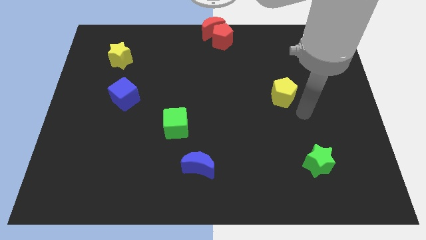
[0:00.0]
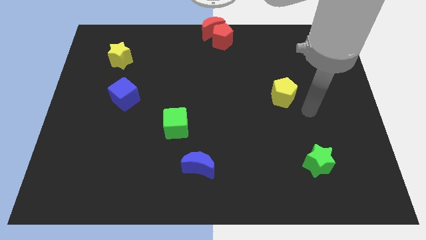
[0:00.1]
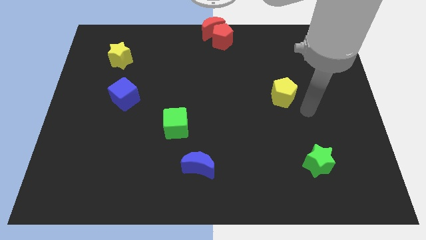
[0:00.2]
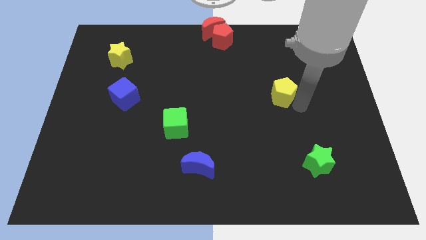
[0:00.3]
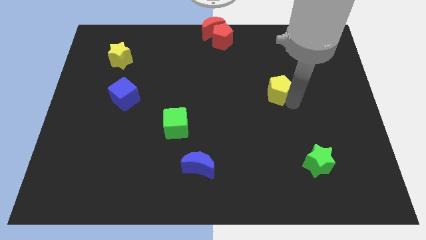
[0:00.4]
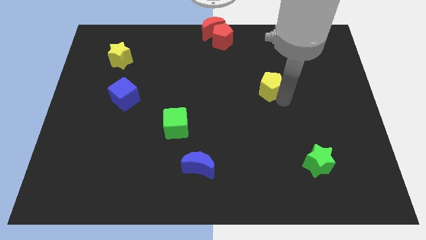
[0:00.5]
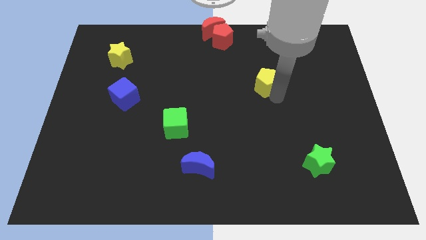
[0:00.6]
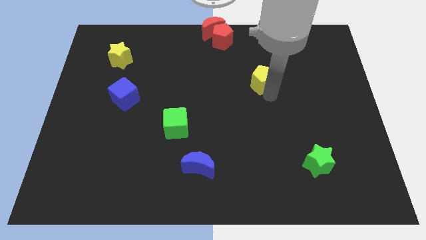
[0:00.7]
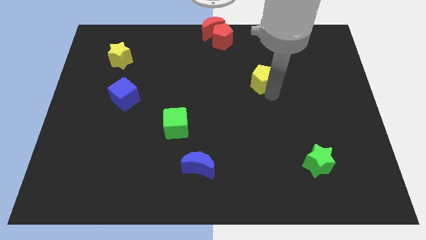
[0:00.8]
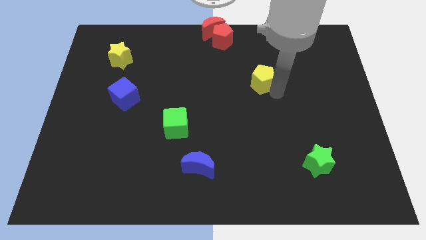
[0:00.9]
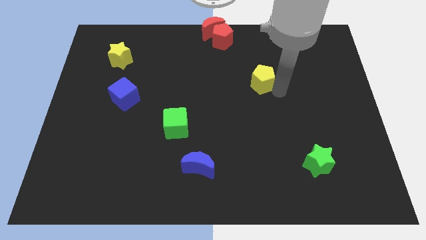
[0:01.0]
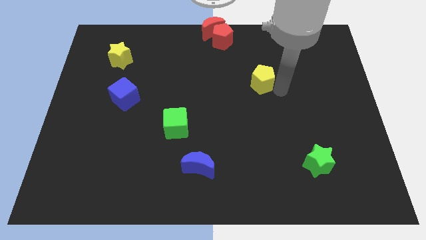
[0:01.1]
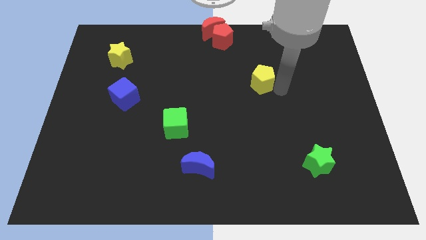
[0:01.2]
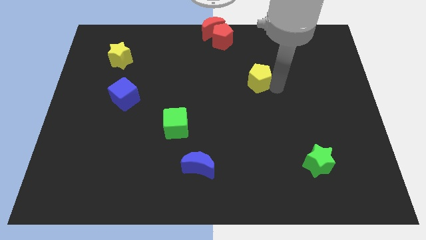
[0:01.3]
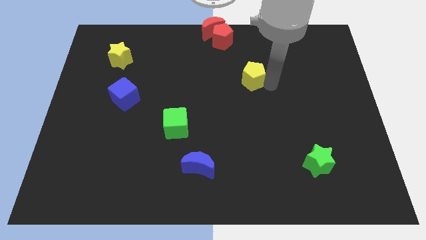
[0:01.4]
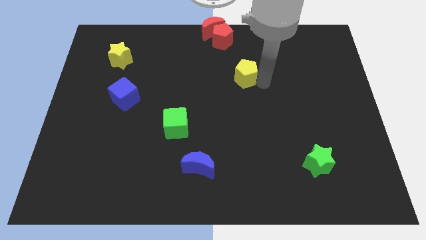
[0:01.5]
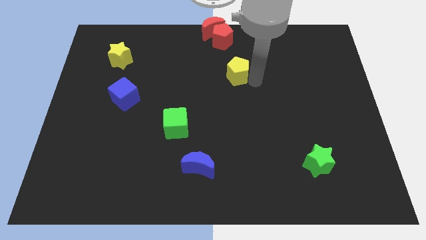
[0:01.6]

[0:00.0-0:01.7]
reposition the yellow pentagon from present place

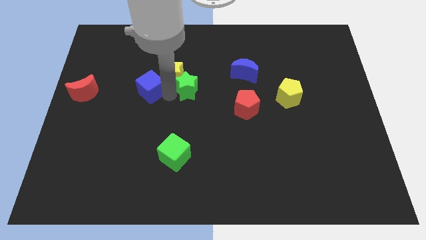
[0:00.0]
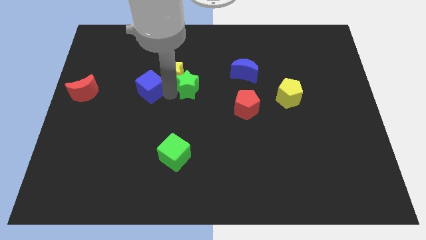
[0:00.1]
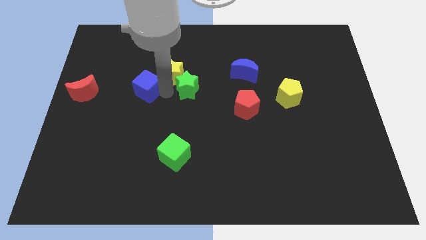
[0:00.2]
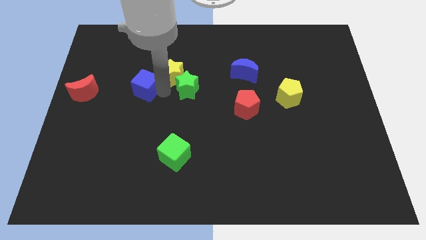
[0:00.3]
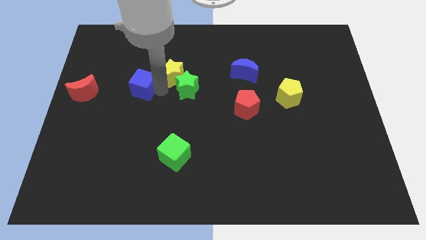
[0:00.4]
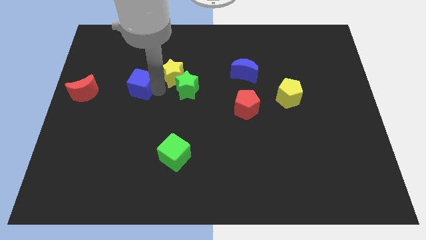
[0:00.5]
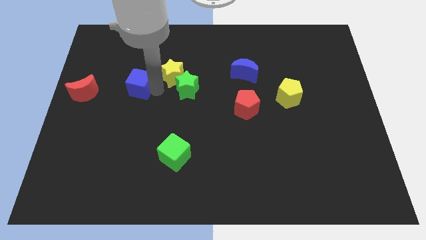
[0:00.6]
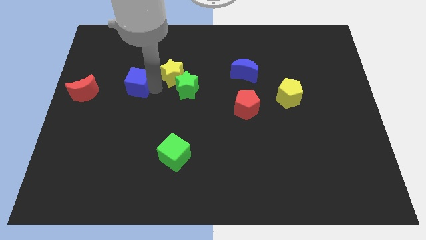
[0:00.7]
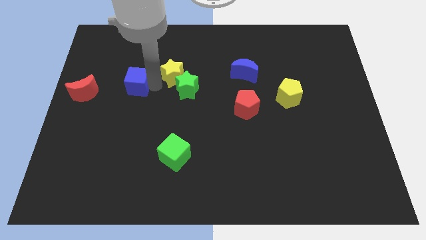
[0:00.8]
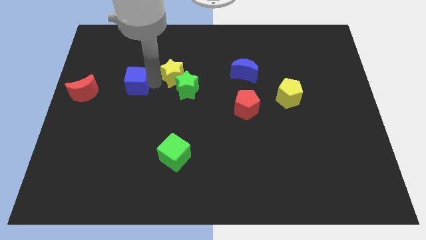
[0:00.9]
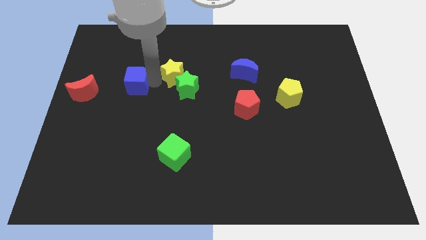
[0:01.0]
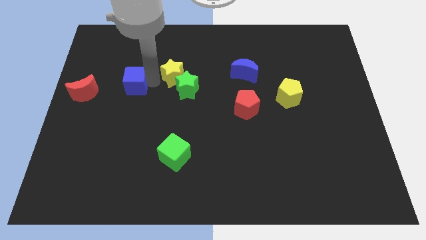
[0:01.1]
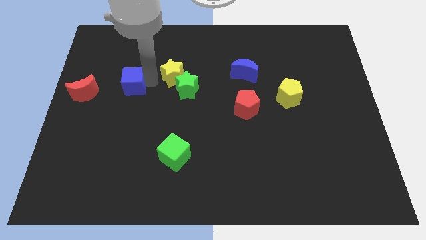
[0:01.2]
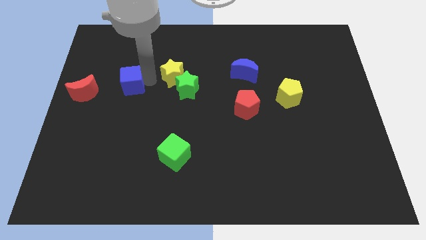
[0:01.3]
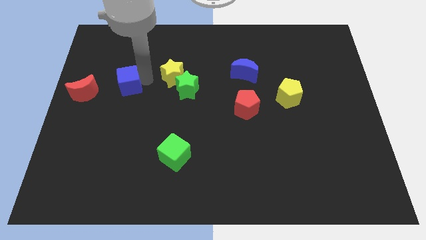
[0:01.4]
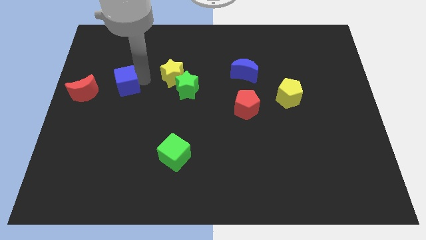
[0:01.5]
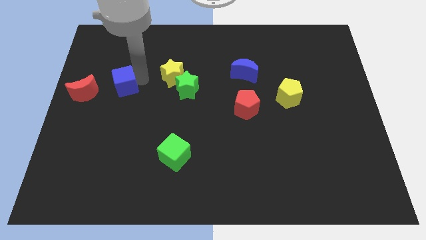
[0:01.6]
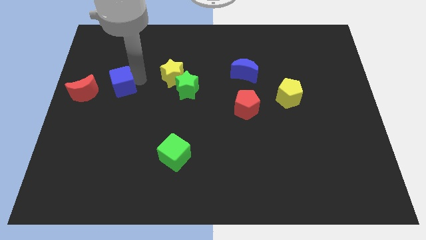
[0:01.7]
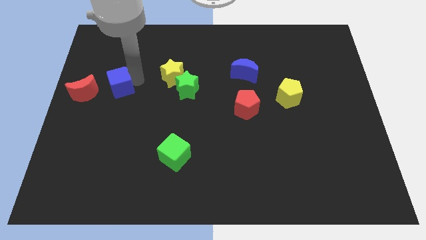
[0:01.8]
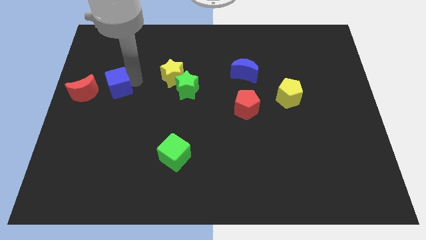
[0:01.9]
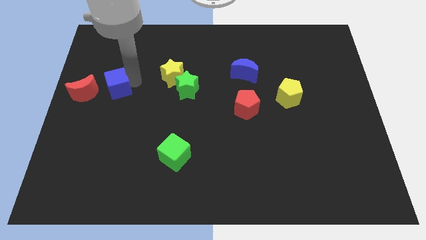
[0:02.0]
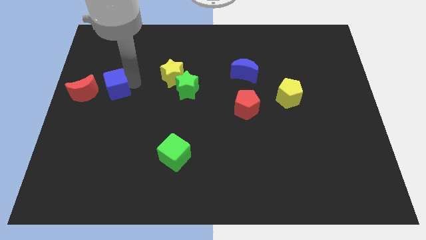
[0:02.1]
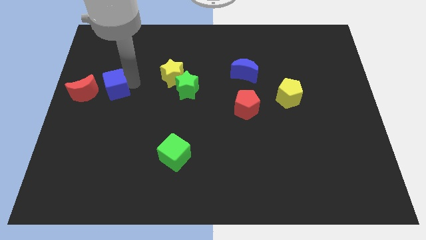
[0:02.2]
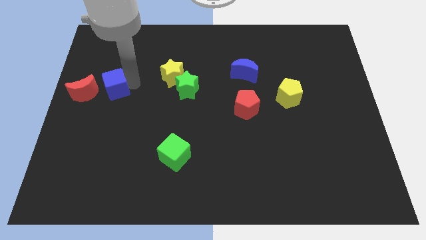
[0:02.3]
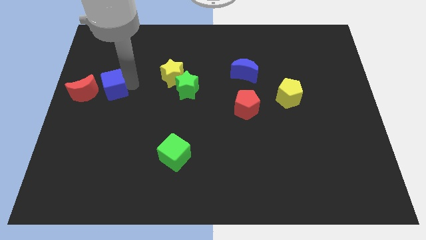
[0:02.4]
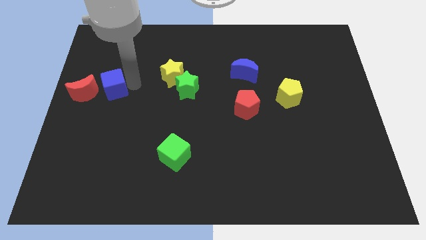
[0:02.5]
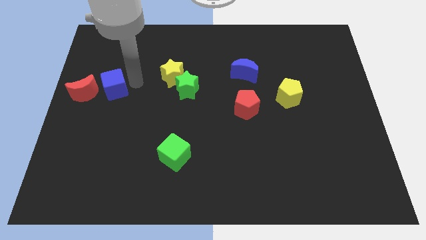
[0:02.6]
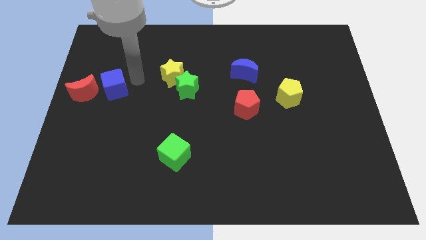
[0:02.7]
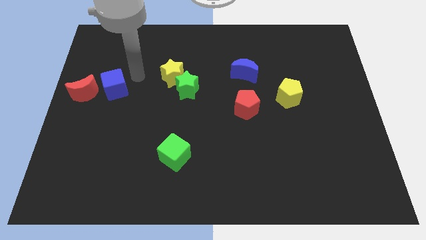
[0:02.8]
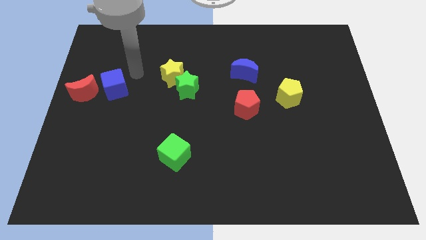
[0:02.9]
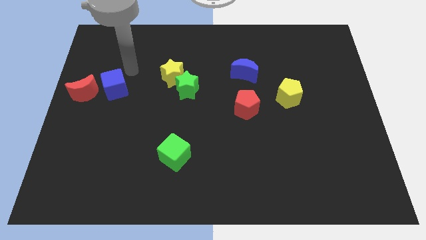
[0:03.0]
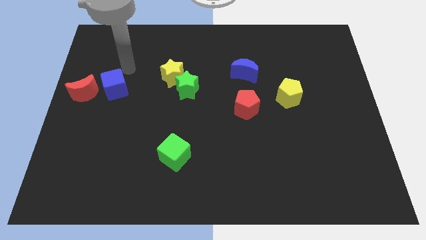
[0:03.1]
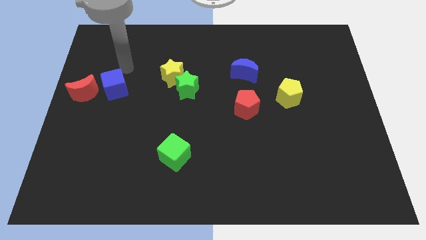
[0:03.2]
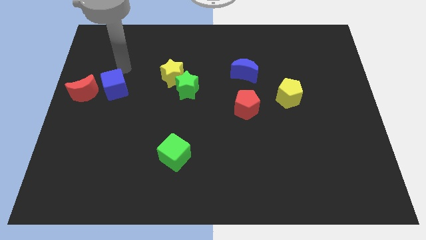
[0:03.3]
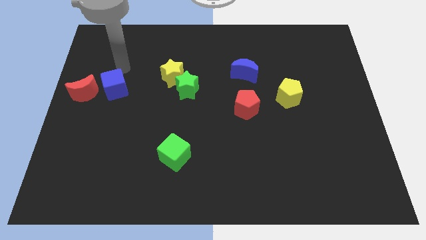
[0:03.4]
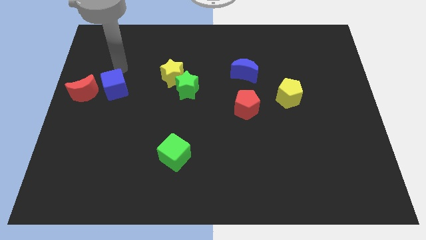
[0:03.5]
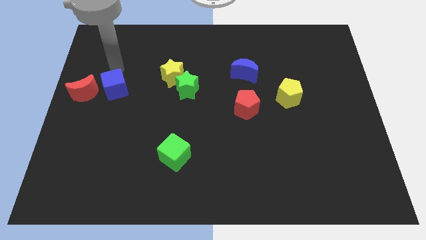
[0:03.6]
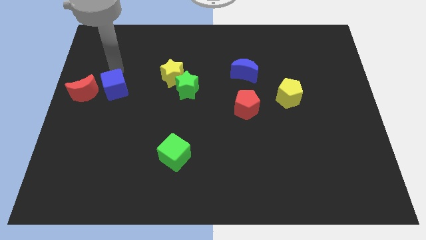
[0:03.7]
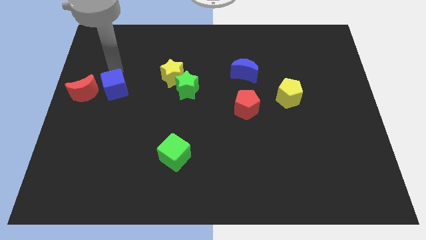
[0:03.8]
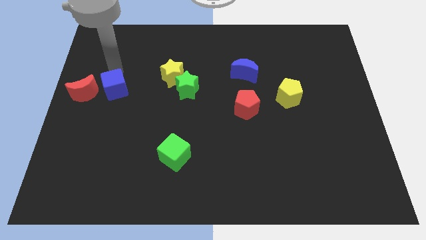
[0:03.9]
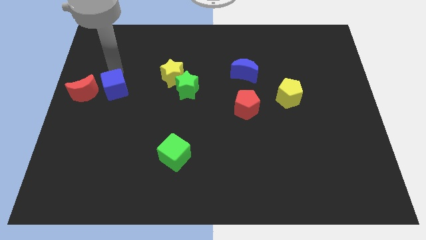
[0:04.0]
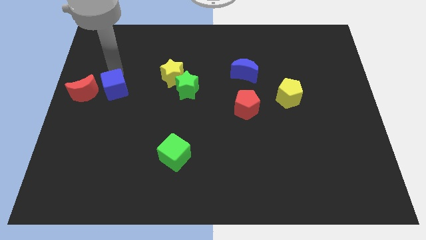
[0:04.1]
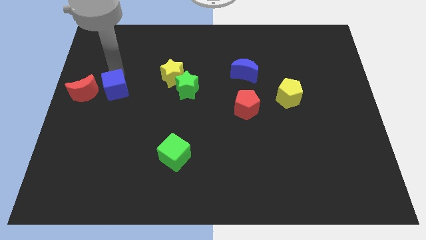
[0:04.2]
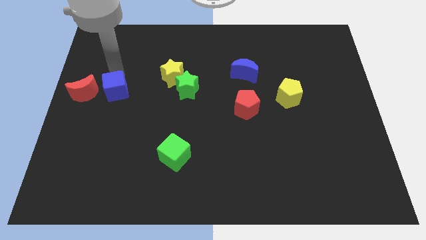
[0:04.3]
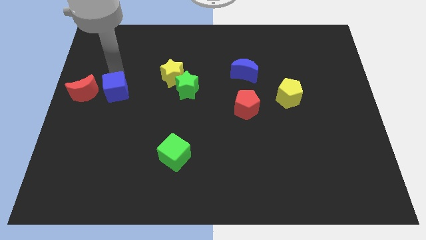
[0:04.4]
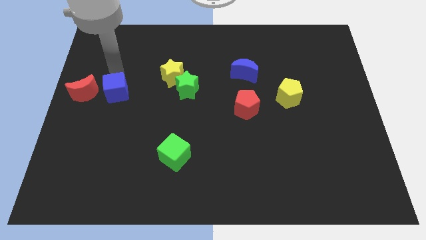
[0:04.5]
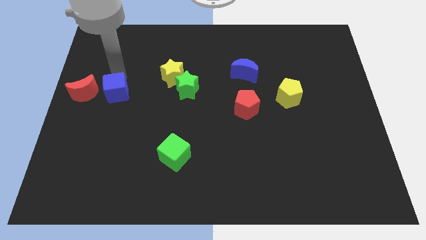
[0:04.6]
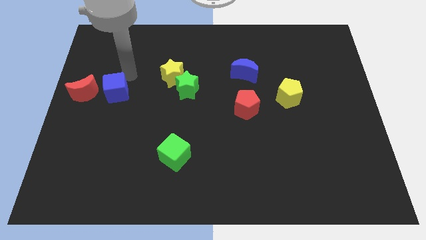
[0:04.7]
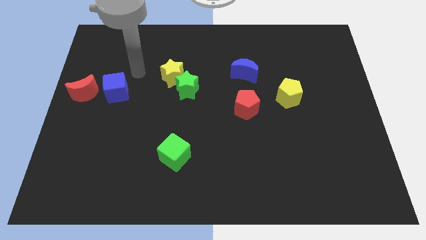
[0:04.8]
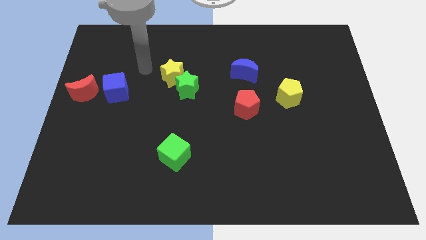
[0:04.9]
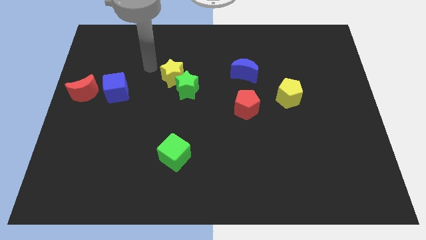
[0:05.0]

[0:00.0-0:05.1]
place the blue cube parallel to green and yellow stars

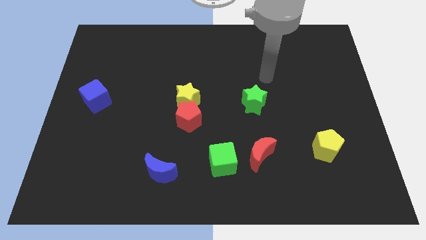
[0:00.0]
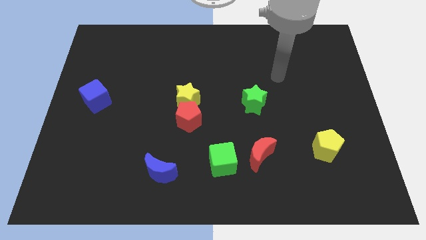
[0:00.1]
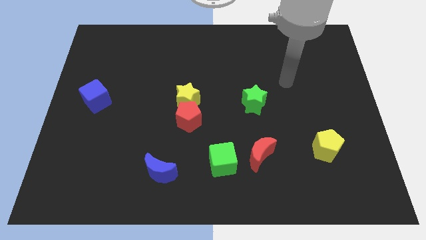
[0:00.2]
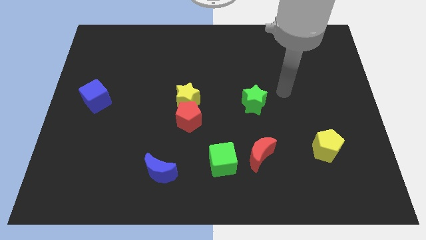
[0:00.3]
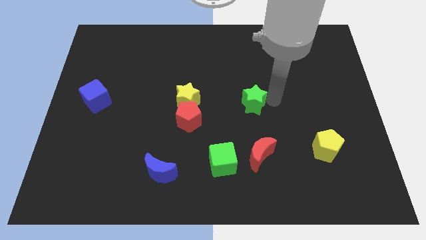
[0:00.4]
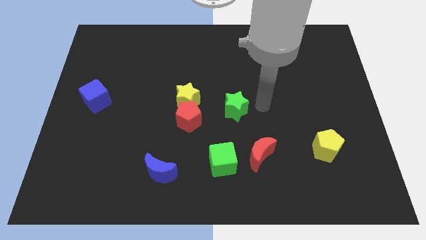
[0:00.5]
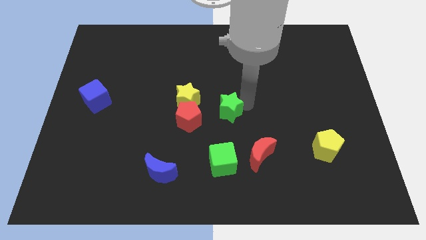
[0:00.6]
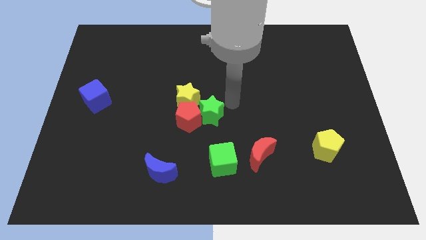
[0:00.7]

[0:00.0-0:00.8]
push the green star to the right of red pentagon

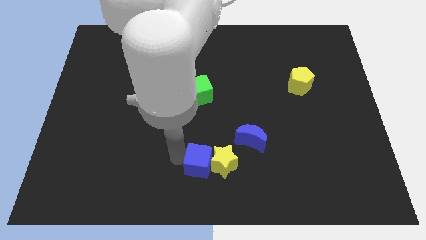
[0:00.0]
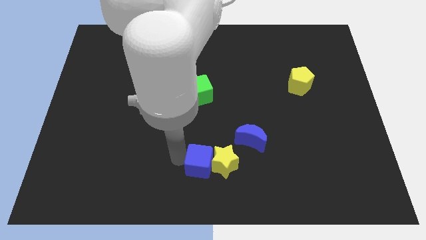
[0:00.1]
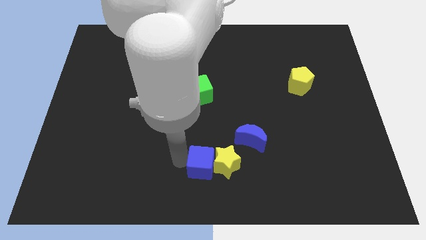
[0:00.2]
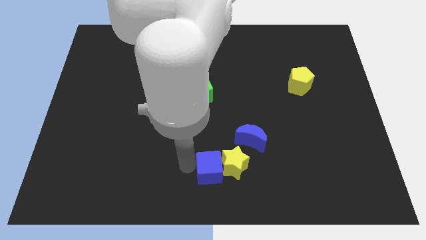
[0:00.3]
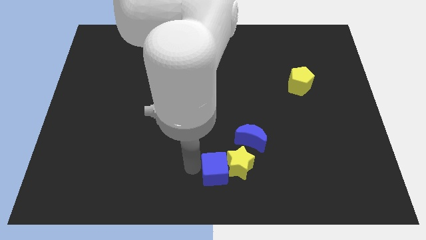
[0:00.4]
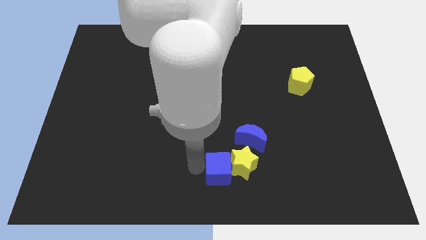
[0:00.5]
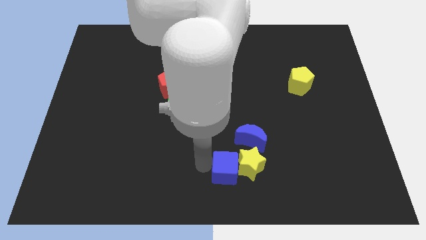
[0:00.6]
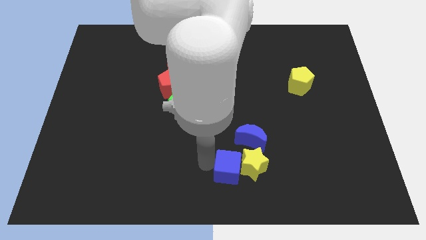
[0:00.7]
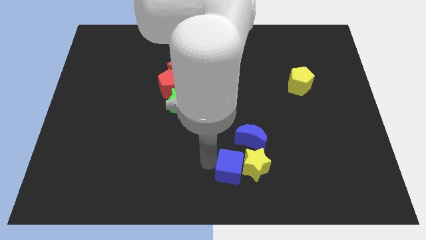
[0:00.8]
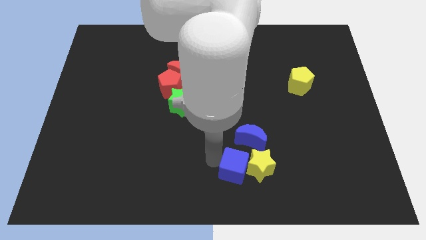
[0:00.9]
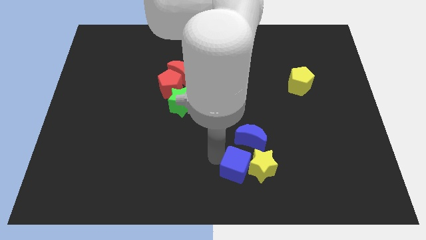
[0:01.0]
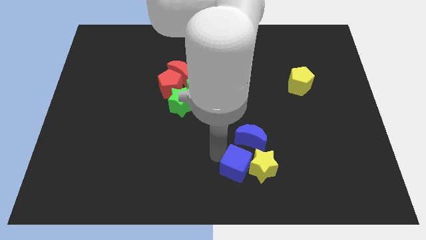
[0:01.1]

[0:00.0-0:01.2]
place the blue cube and yellow star at the bottom of blue moon

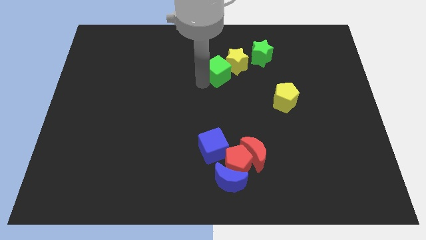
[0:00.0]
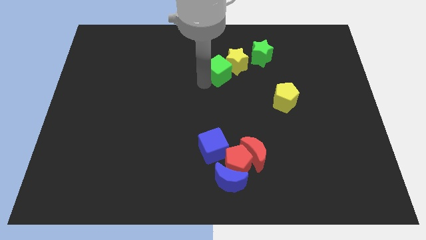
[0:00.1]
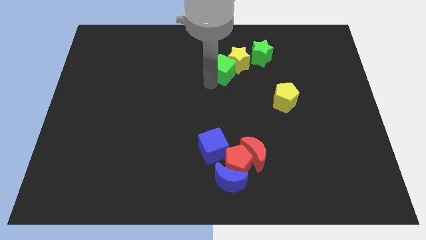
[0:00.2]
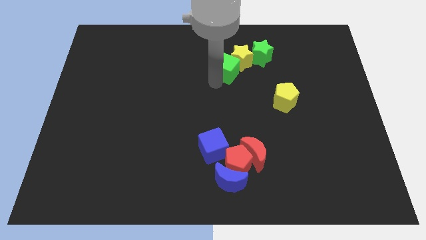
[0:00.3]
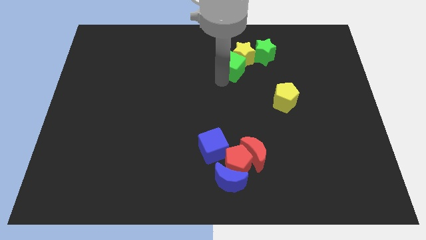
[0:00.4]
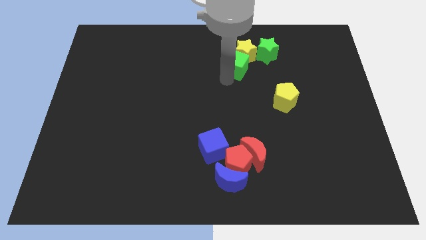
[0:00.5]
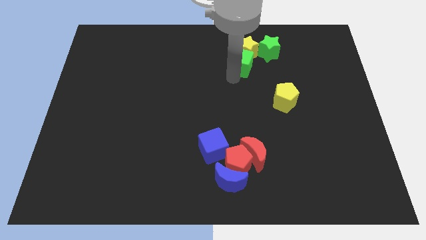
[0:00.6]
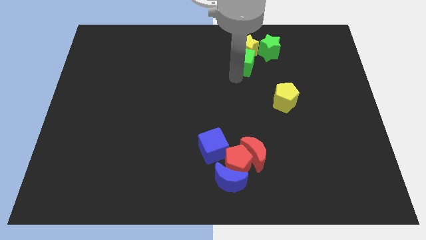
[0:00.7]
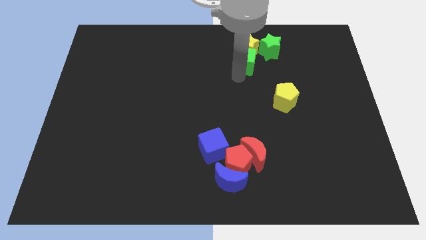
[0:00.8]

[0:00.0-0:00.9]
push the green cube into the yellow star
